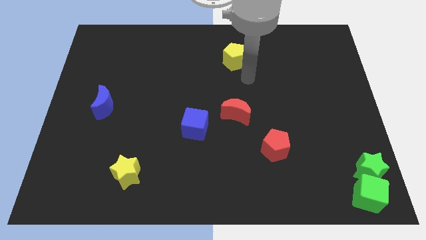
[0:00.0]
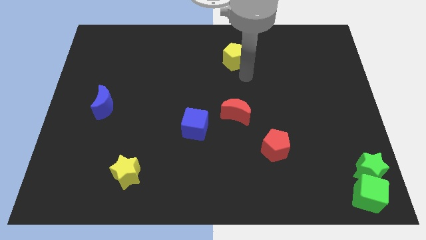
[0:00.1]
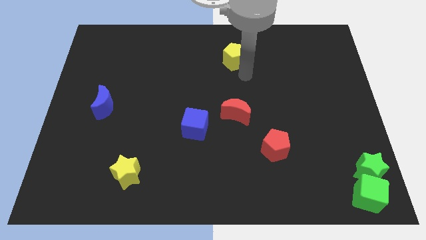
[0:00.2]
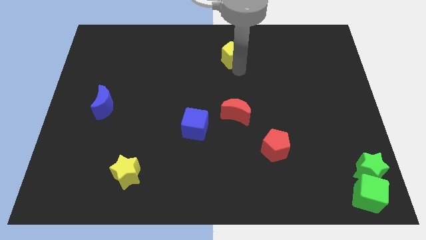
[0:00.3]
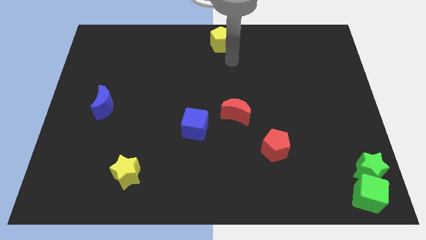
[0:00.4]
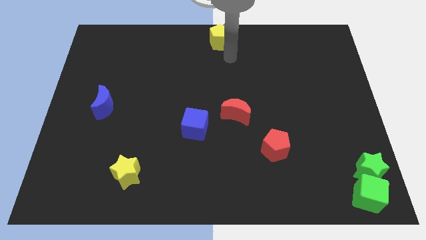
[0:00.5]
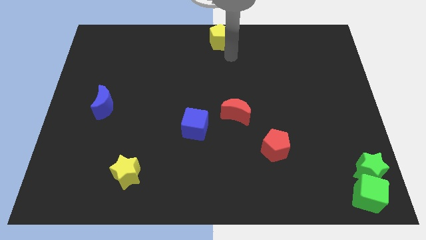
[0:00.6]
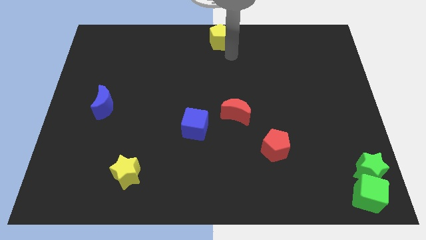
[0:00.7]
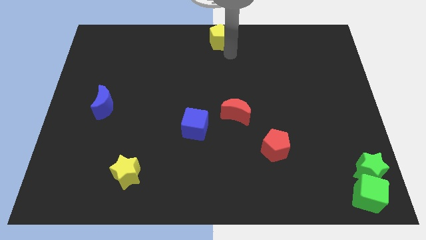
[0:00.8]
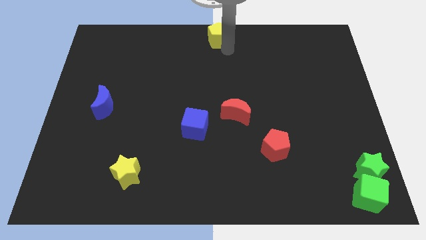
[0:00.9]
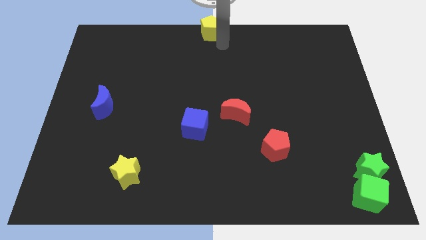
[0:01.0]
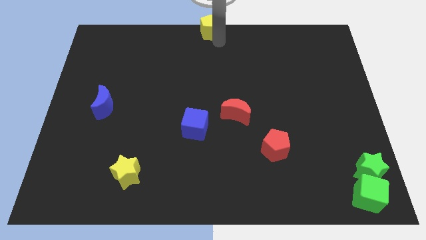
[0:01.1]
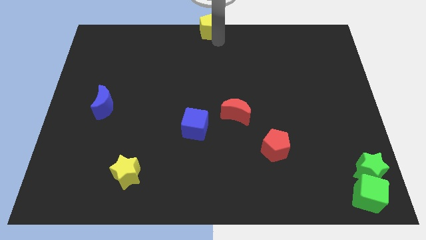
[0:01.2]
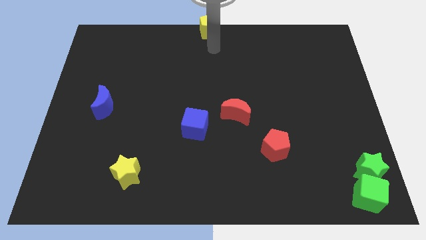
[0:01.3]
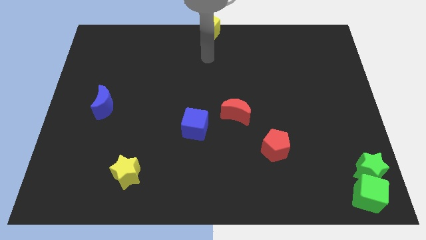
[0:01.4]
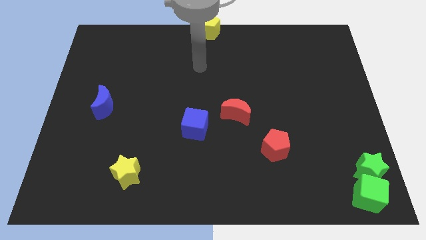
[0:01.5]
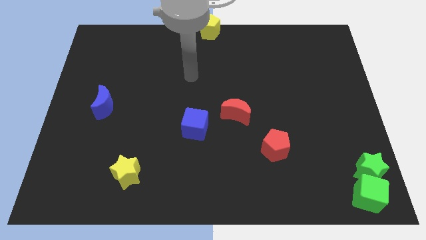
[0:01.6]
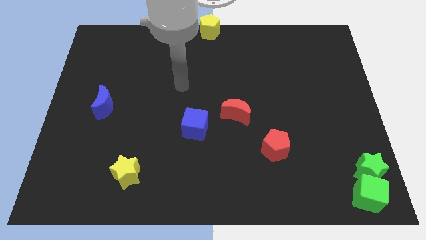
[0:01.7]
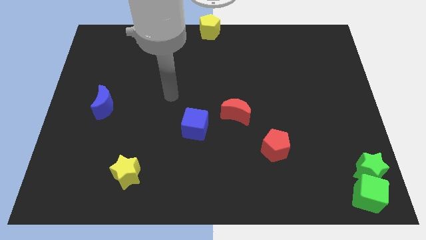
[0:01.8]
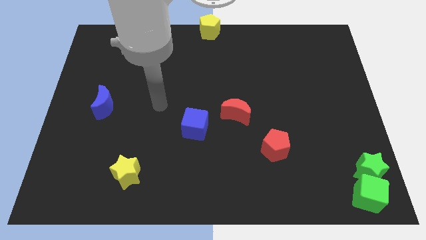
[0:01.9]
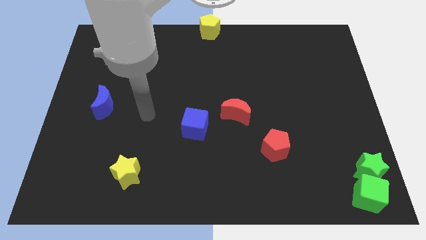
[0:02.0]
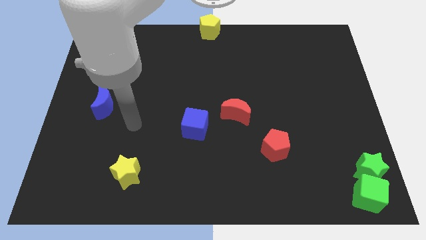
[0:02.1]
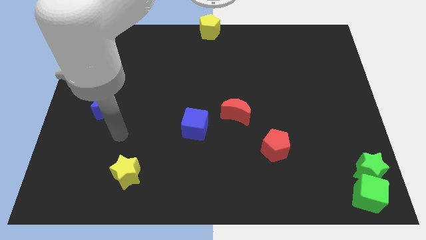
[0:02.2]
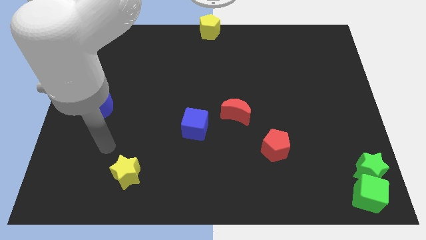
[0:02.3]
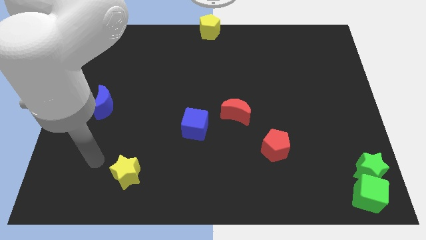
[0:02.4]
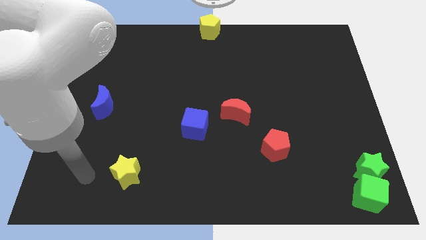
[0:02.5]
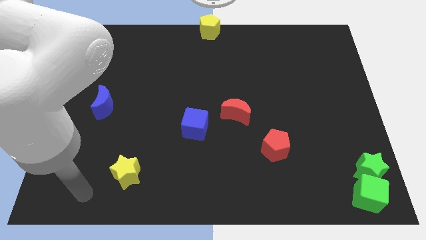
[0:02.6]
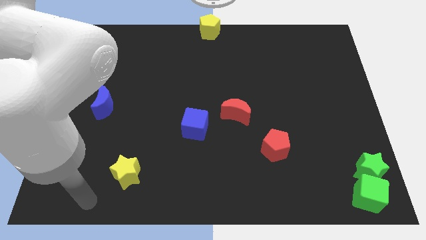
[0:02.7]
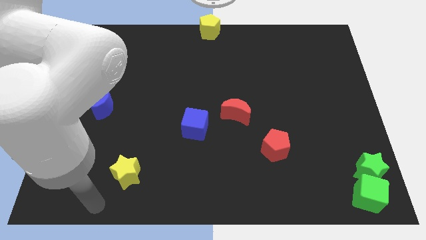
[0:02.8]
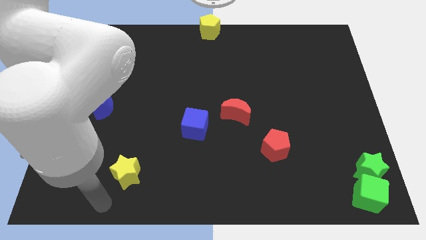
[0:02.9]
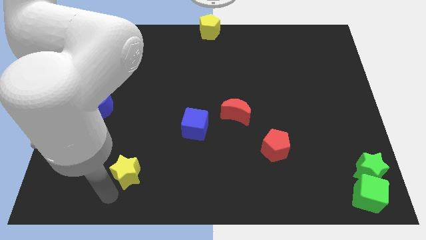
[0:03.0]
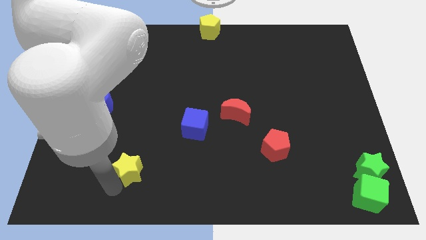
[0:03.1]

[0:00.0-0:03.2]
place the yellow pentagon near top center of the board

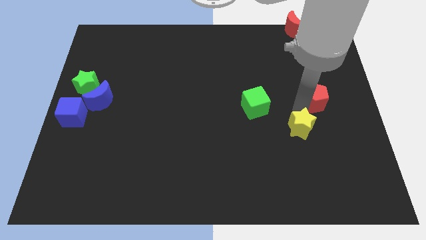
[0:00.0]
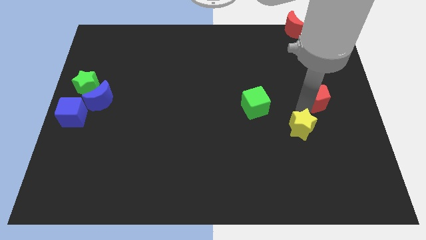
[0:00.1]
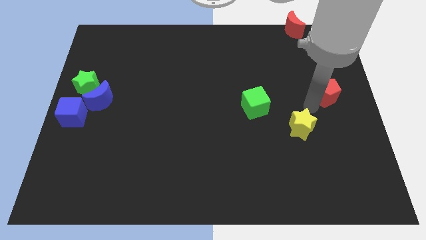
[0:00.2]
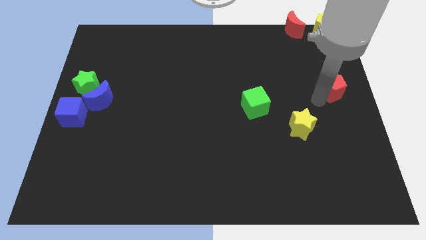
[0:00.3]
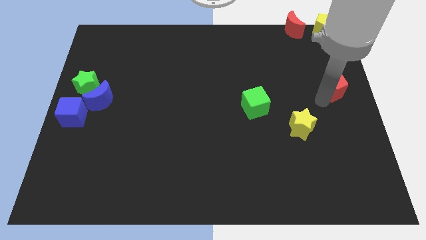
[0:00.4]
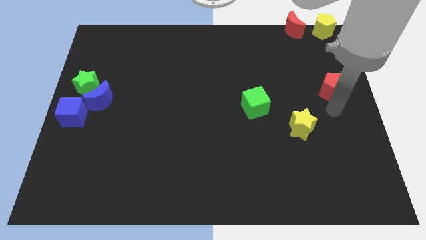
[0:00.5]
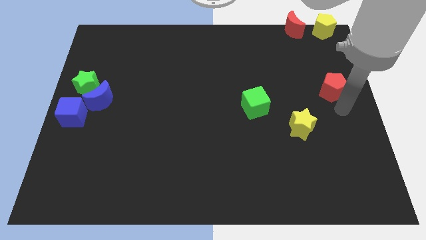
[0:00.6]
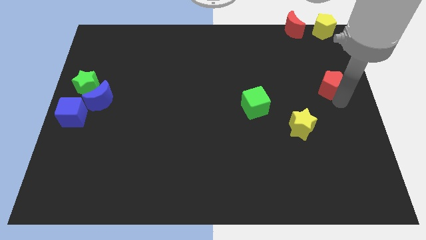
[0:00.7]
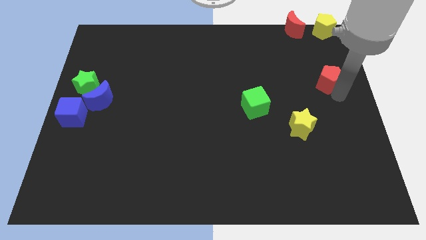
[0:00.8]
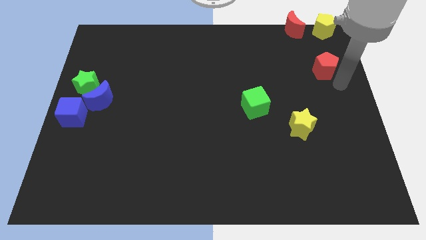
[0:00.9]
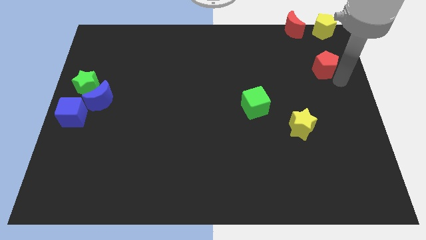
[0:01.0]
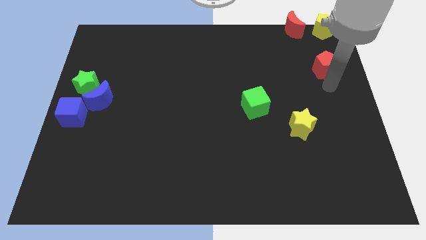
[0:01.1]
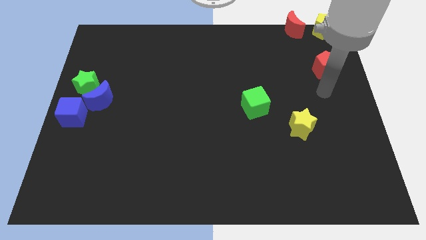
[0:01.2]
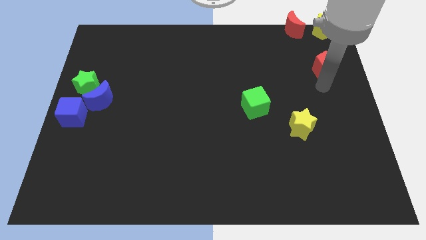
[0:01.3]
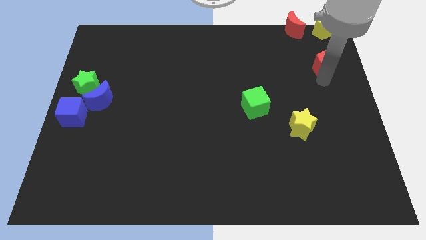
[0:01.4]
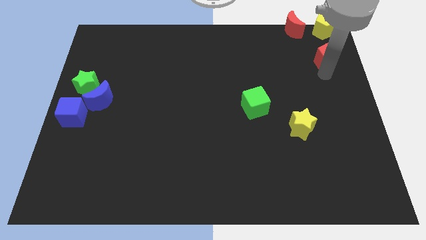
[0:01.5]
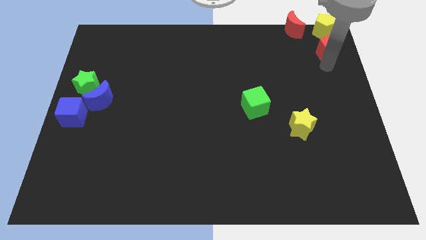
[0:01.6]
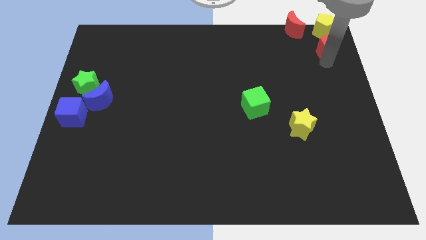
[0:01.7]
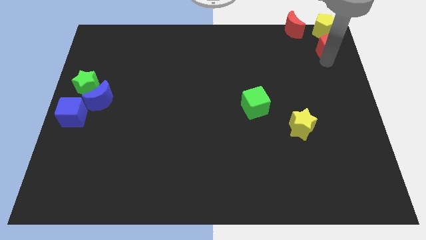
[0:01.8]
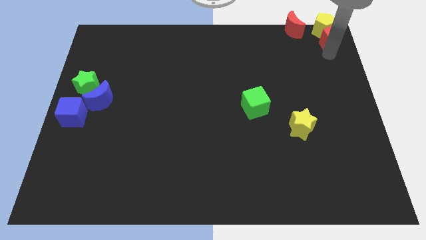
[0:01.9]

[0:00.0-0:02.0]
push the red pentagon into yellow pentagon

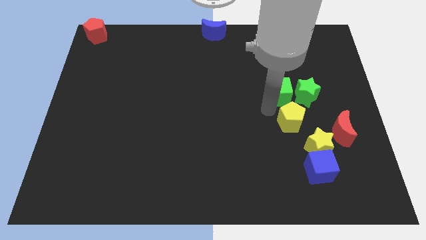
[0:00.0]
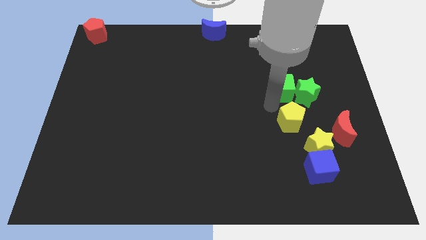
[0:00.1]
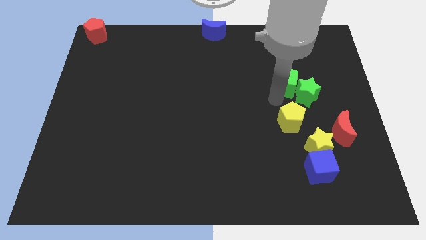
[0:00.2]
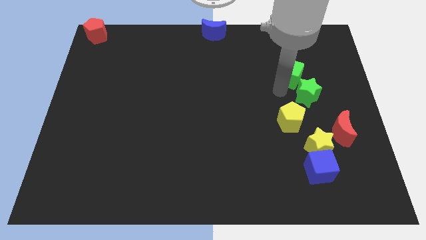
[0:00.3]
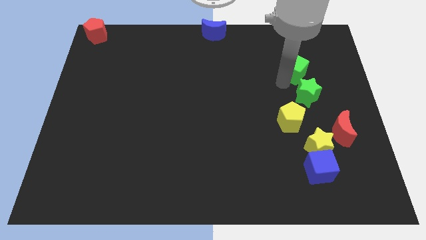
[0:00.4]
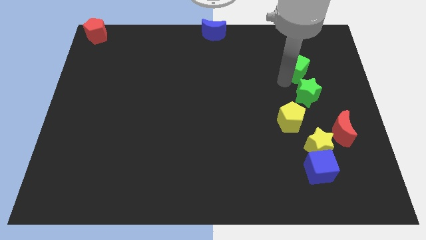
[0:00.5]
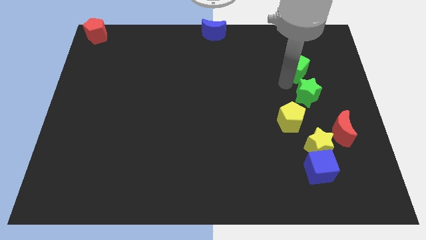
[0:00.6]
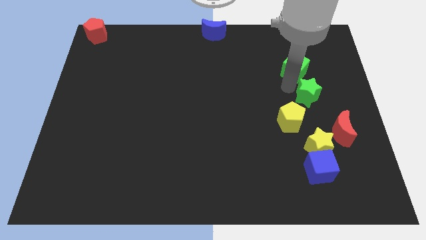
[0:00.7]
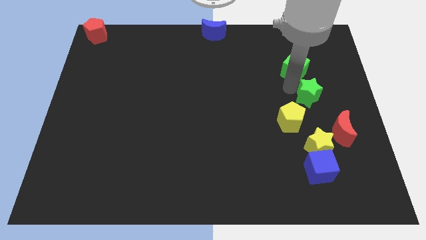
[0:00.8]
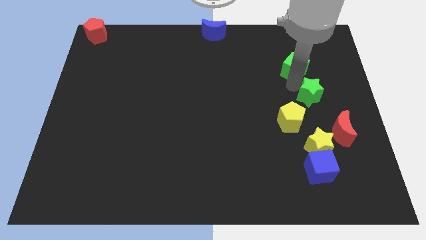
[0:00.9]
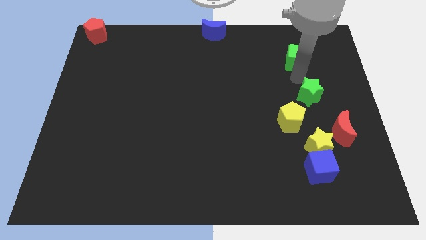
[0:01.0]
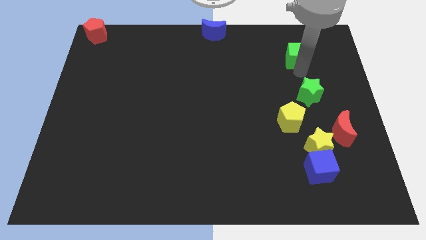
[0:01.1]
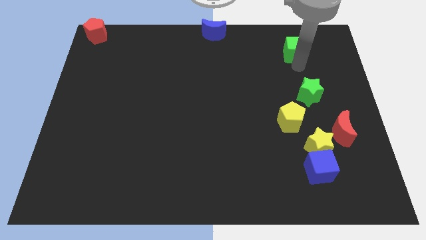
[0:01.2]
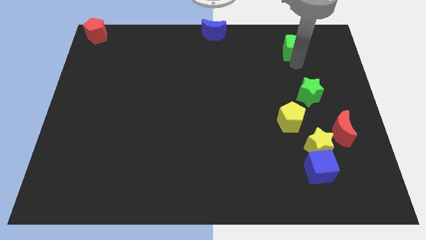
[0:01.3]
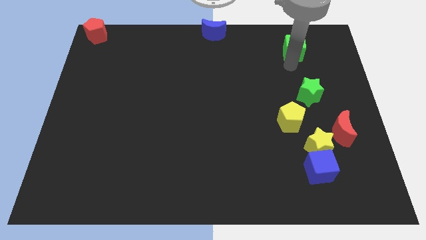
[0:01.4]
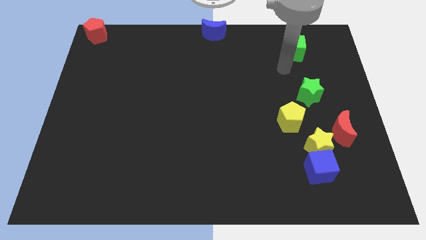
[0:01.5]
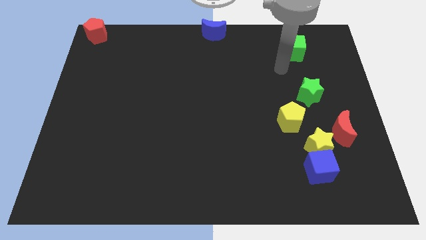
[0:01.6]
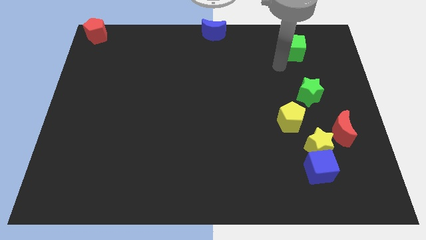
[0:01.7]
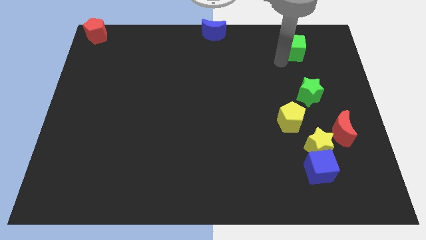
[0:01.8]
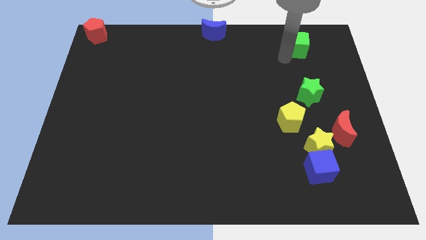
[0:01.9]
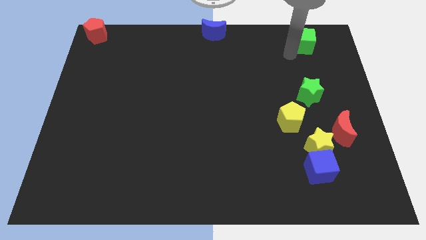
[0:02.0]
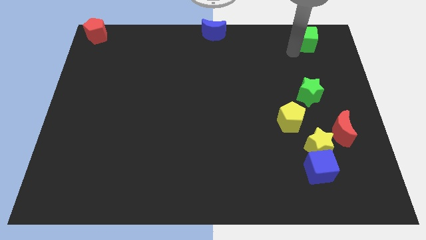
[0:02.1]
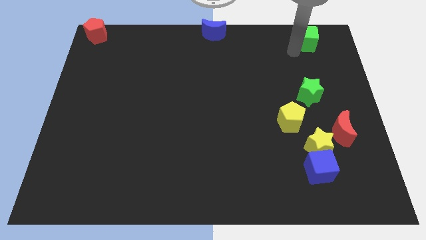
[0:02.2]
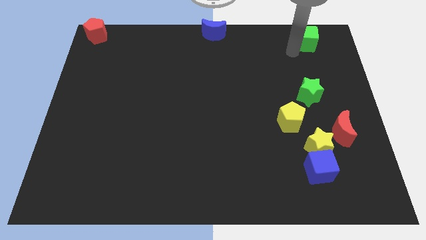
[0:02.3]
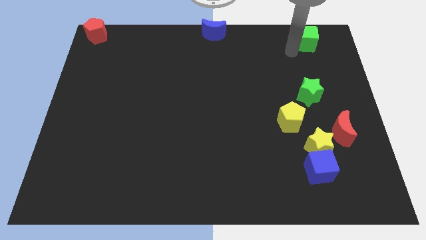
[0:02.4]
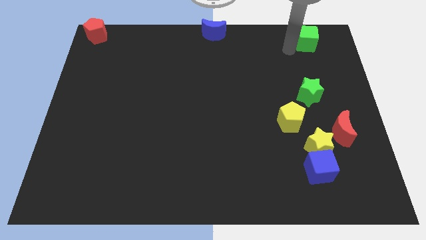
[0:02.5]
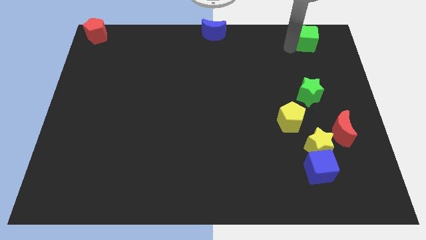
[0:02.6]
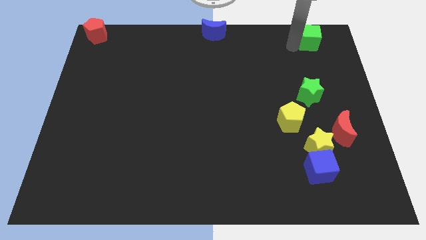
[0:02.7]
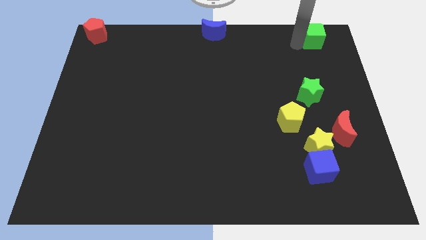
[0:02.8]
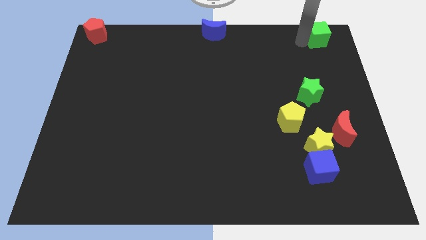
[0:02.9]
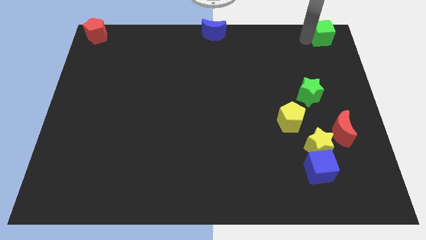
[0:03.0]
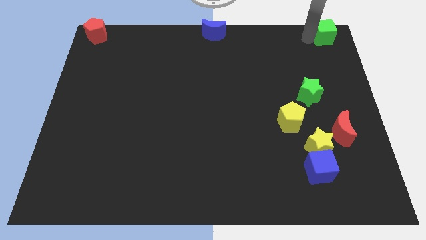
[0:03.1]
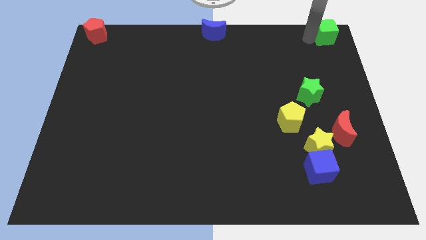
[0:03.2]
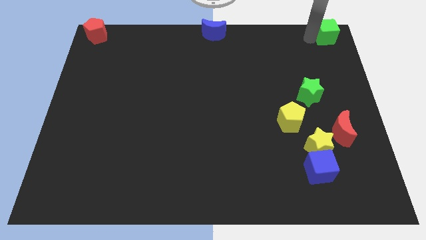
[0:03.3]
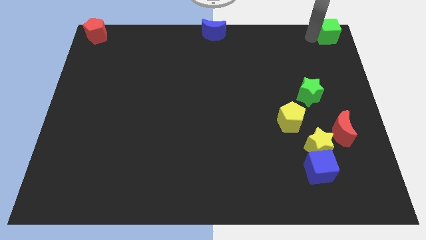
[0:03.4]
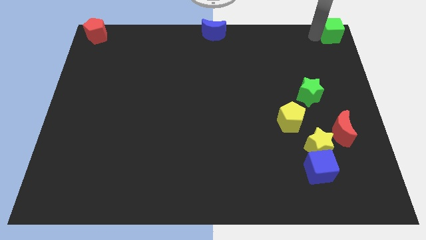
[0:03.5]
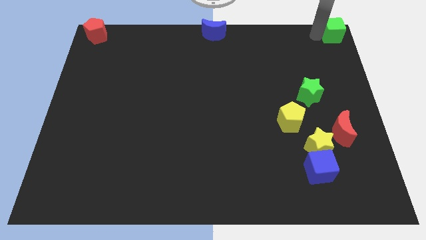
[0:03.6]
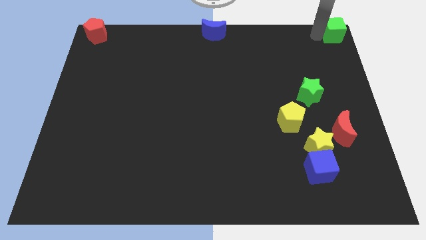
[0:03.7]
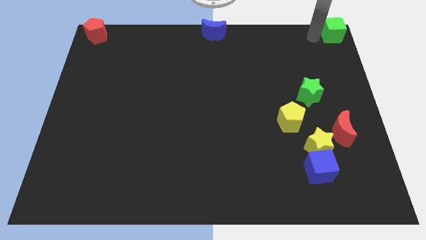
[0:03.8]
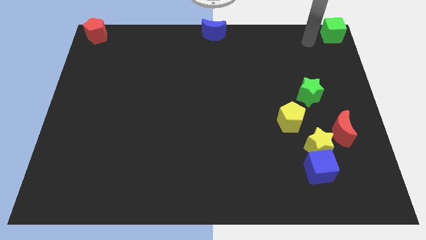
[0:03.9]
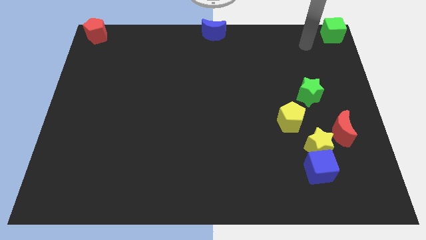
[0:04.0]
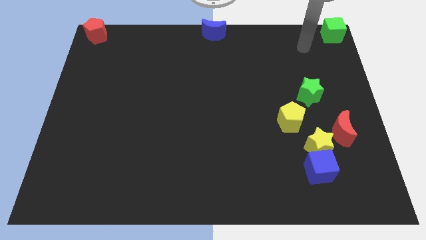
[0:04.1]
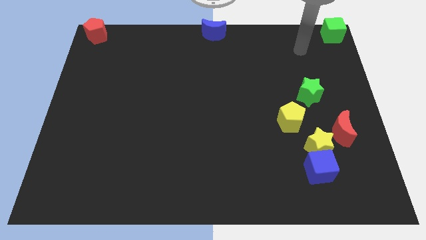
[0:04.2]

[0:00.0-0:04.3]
push the green cube to the top right of the board
